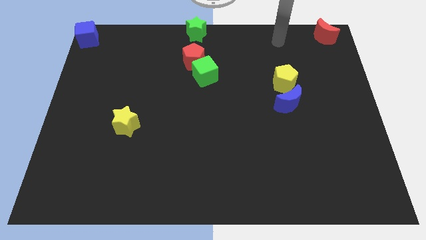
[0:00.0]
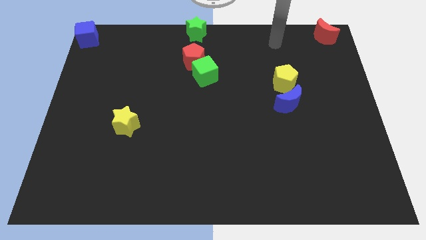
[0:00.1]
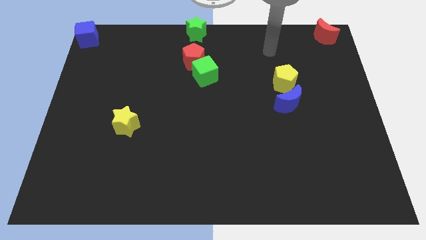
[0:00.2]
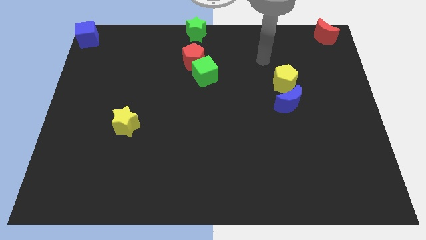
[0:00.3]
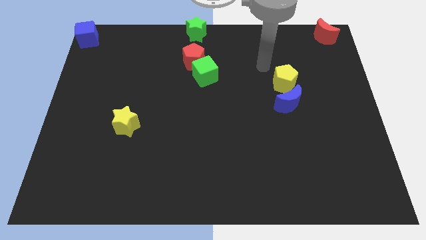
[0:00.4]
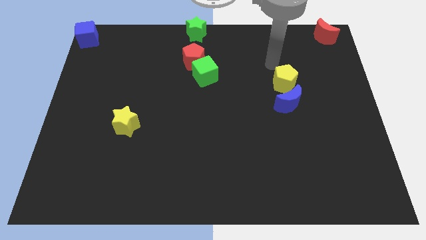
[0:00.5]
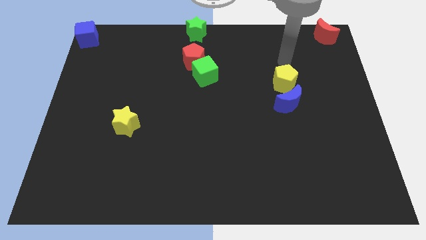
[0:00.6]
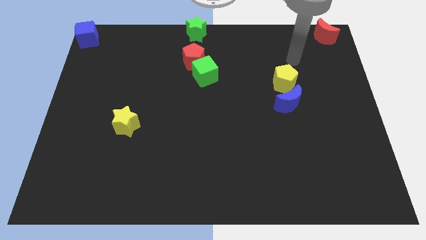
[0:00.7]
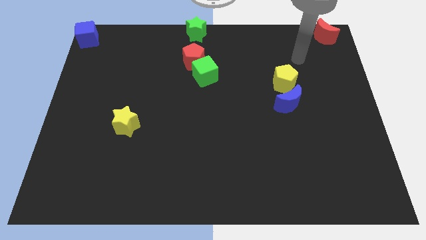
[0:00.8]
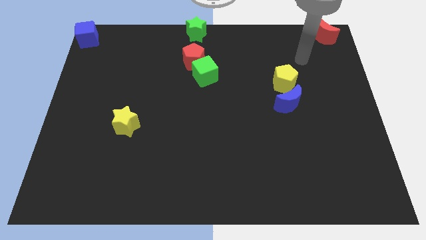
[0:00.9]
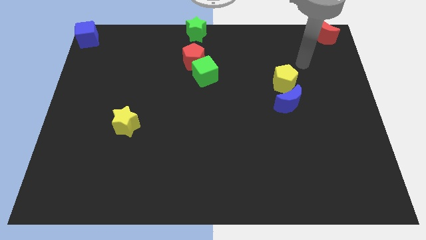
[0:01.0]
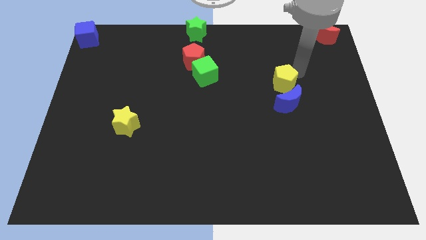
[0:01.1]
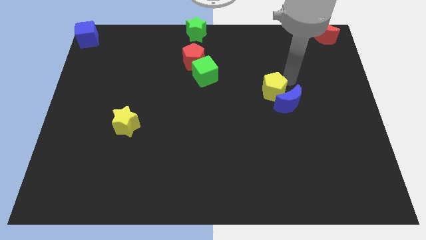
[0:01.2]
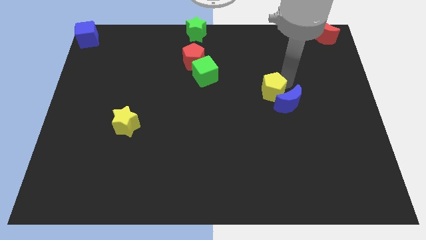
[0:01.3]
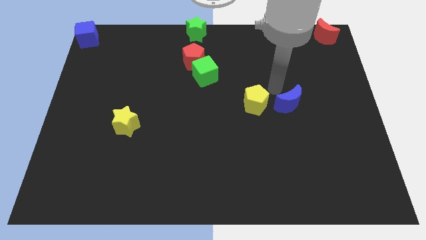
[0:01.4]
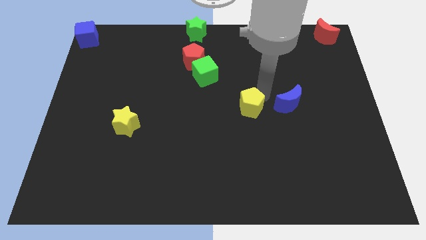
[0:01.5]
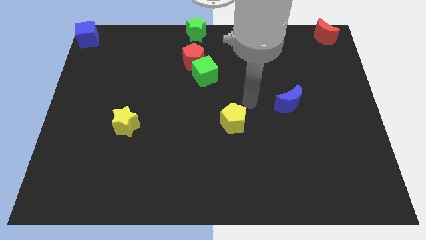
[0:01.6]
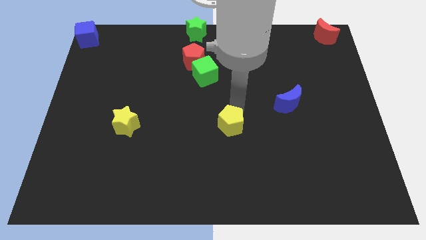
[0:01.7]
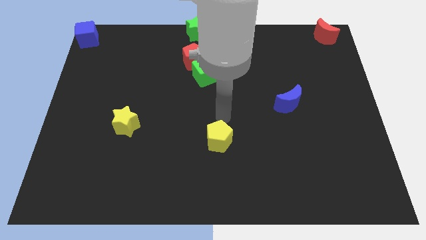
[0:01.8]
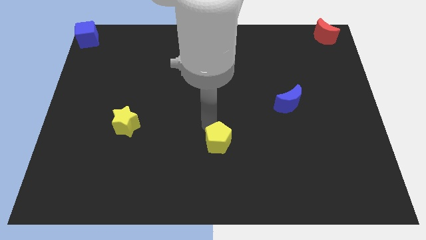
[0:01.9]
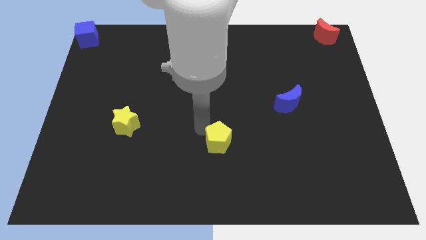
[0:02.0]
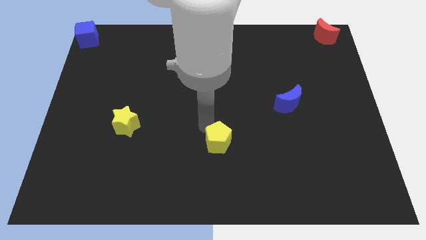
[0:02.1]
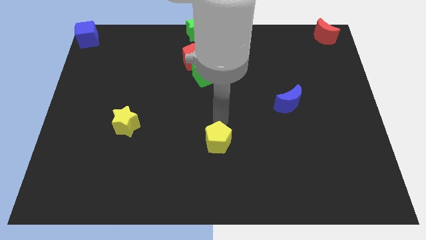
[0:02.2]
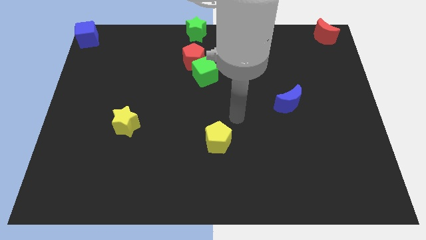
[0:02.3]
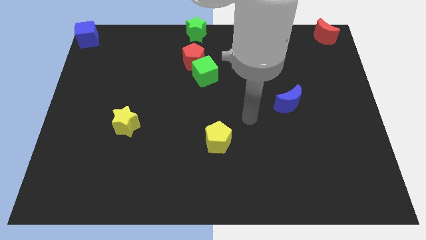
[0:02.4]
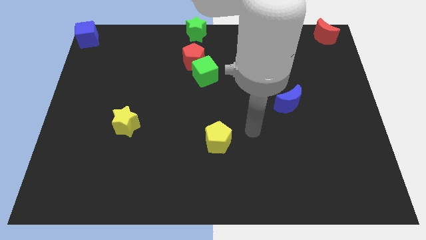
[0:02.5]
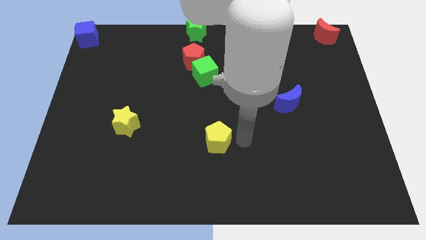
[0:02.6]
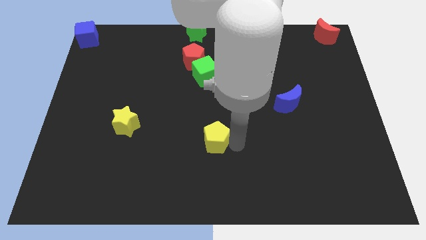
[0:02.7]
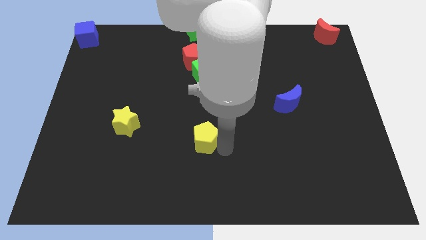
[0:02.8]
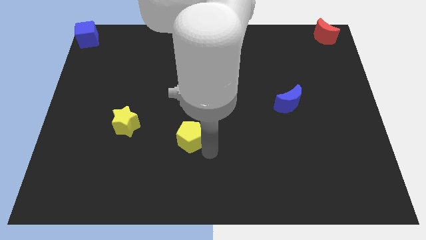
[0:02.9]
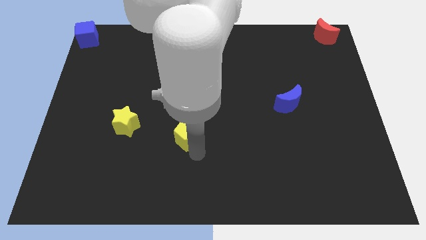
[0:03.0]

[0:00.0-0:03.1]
separate the yellow pentagon and blue moon

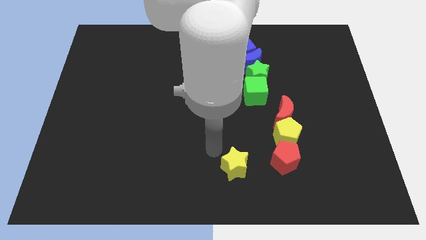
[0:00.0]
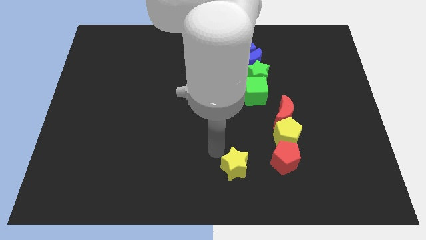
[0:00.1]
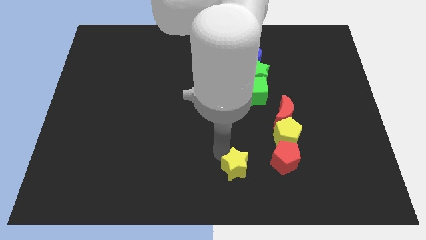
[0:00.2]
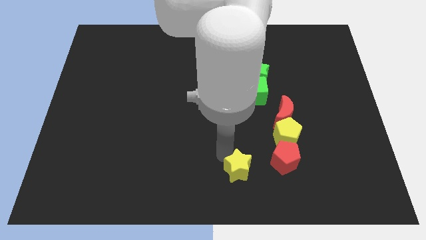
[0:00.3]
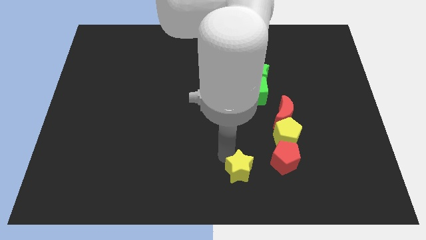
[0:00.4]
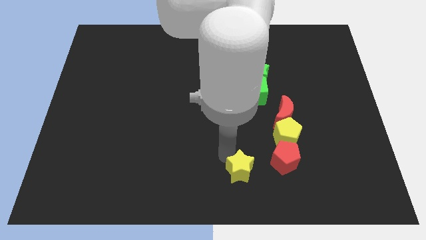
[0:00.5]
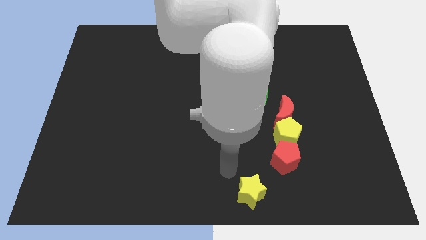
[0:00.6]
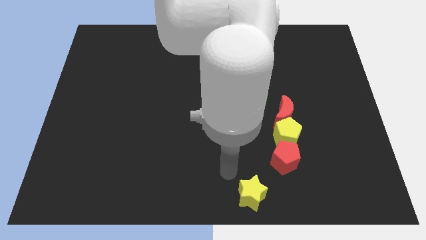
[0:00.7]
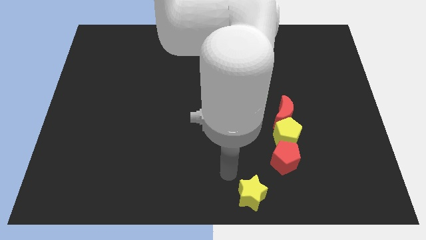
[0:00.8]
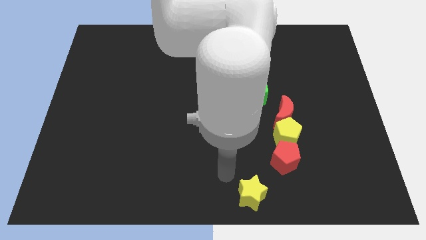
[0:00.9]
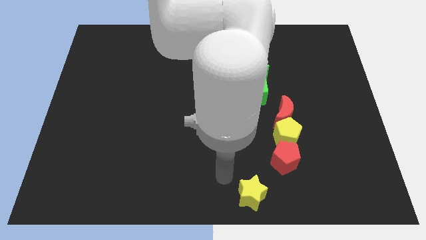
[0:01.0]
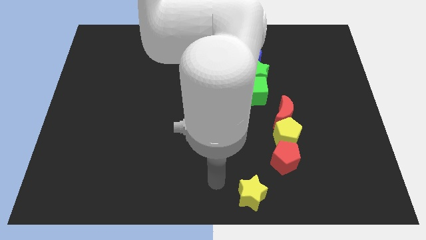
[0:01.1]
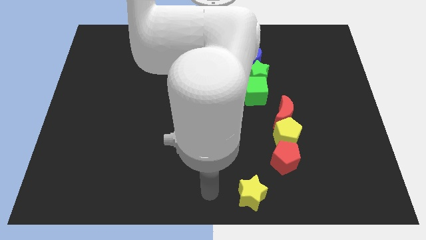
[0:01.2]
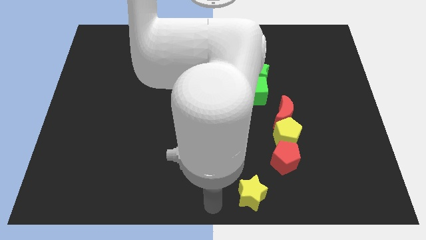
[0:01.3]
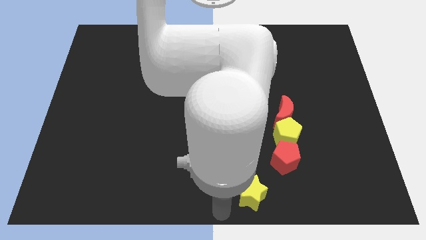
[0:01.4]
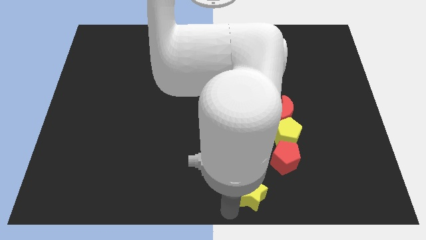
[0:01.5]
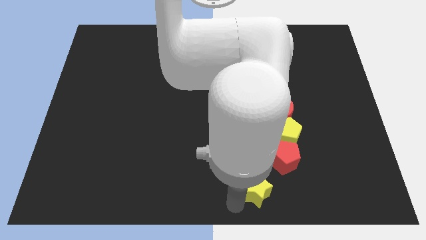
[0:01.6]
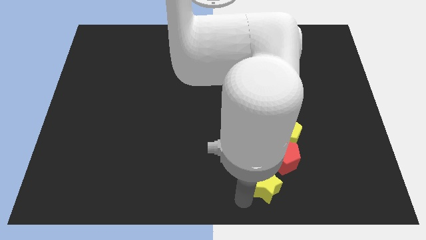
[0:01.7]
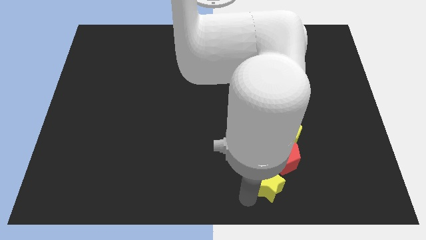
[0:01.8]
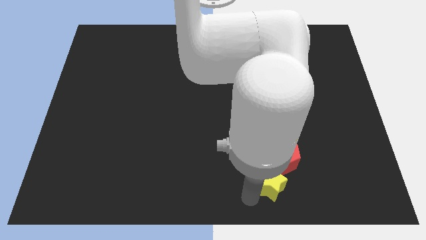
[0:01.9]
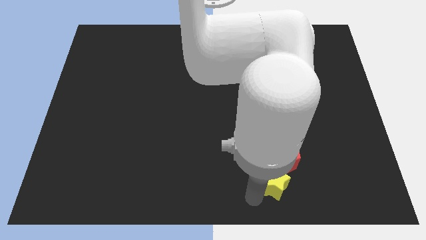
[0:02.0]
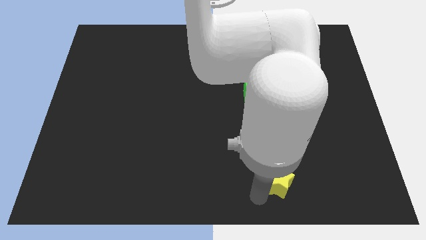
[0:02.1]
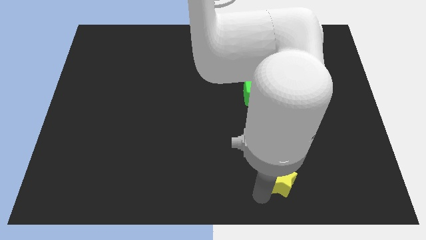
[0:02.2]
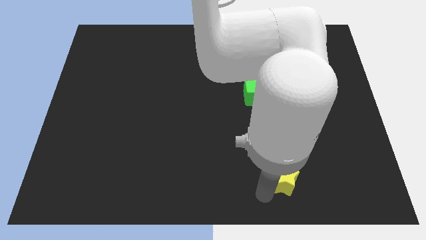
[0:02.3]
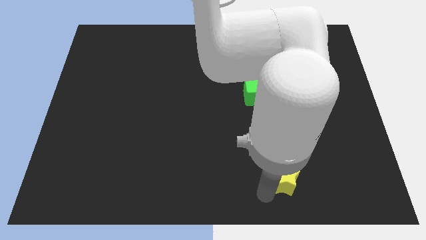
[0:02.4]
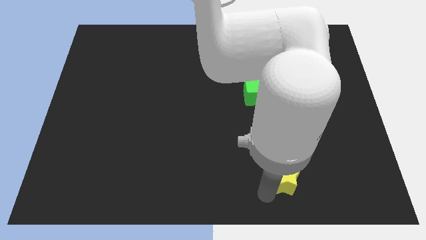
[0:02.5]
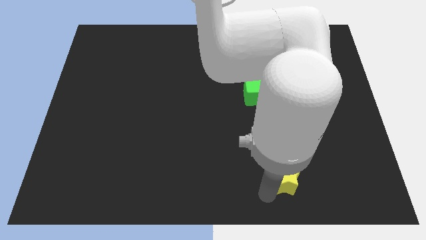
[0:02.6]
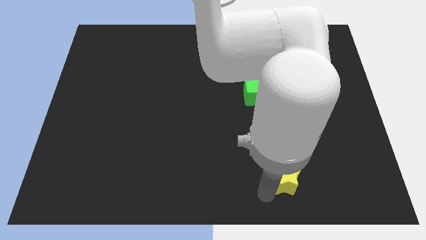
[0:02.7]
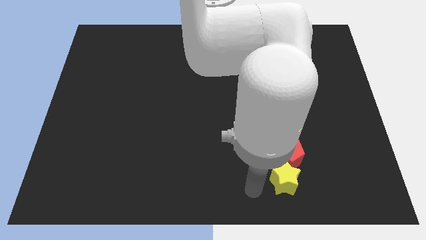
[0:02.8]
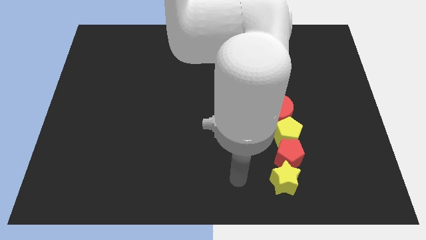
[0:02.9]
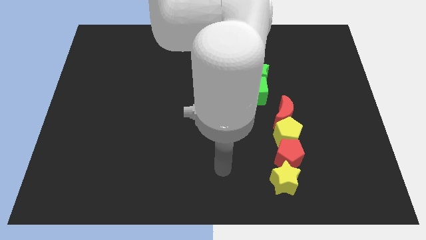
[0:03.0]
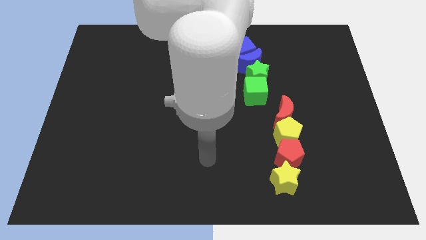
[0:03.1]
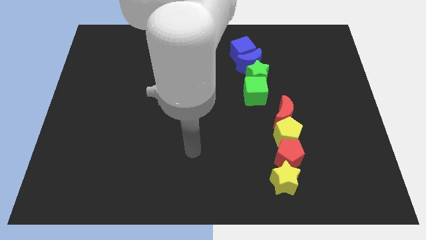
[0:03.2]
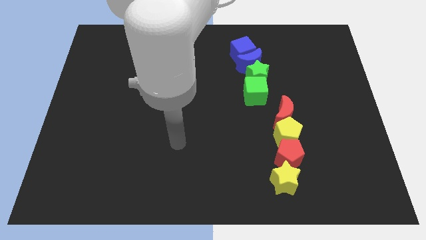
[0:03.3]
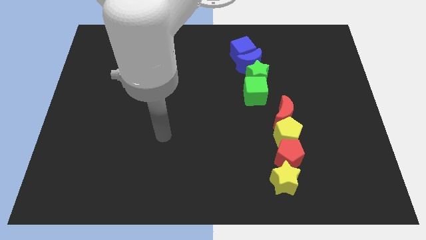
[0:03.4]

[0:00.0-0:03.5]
put the yellow star at the bottom of the red pentagon

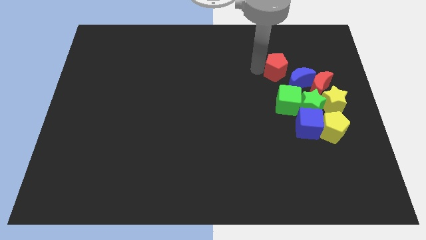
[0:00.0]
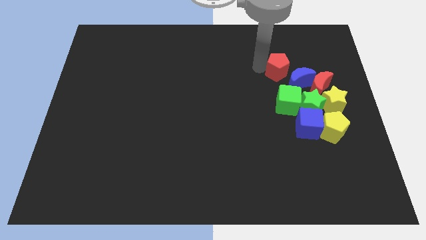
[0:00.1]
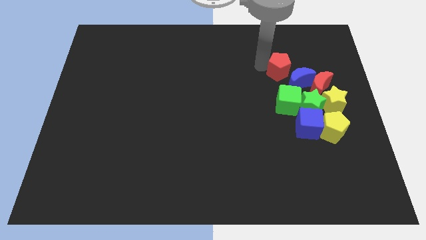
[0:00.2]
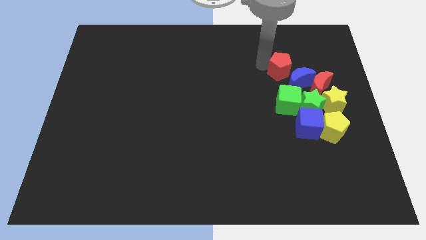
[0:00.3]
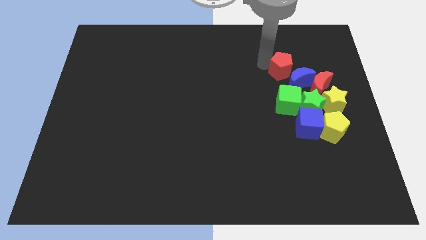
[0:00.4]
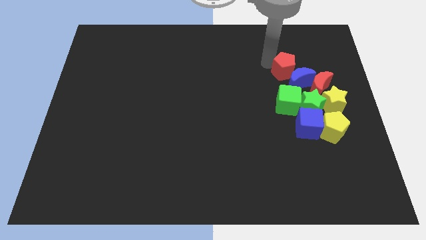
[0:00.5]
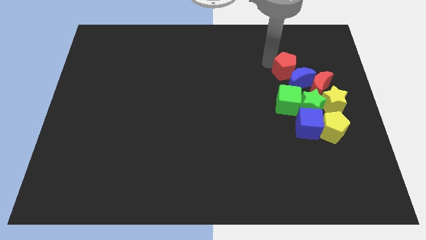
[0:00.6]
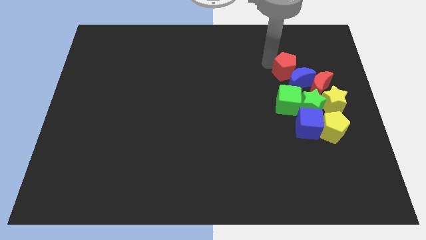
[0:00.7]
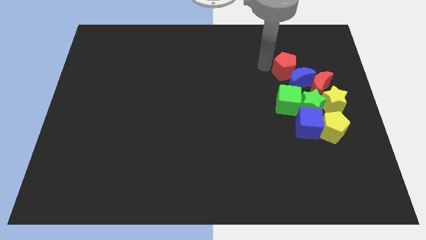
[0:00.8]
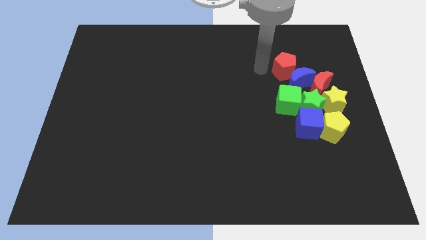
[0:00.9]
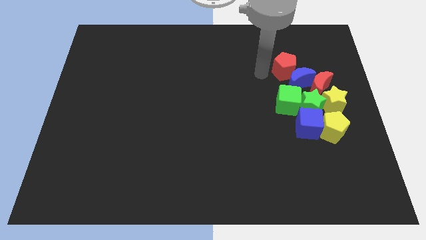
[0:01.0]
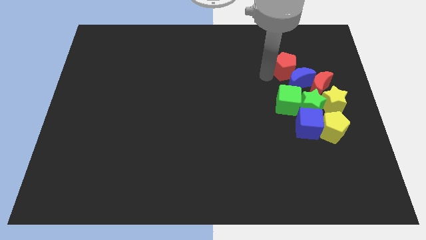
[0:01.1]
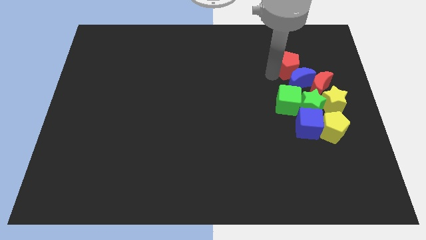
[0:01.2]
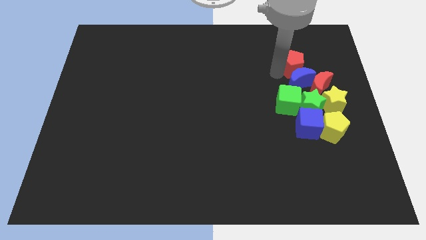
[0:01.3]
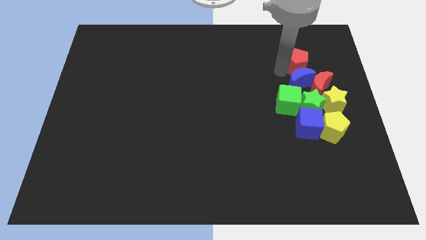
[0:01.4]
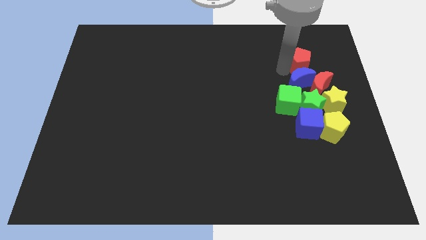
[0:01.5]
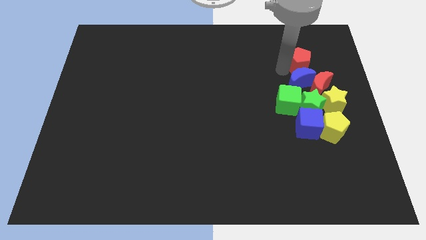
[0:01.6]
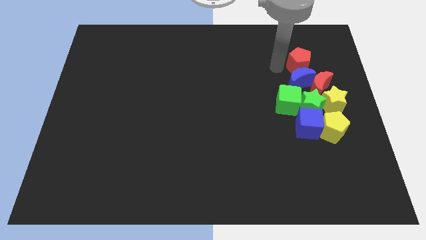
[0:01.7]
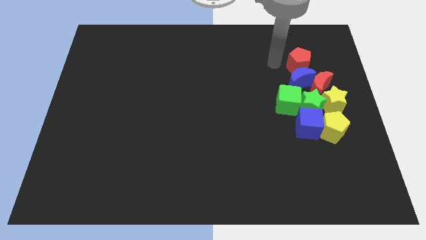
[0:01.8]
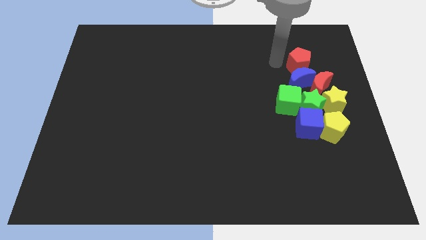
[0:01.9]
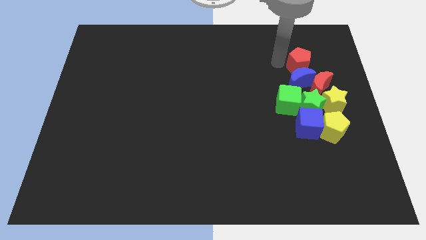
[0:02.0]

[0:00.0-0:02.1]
push red pentagon above the blue moon

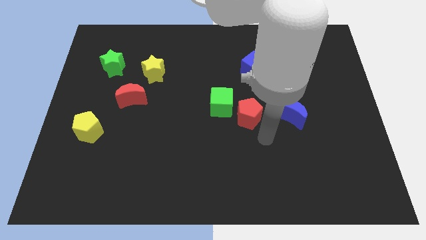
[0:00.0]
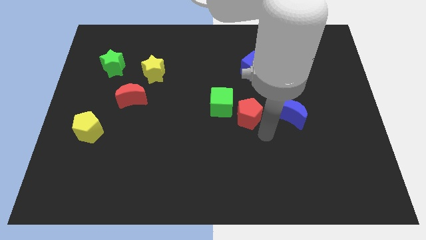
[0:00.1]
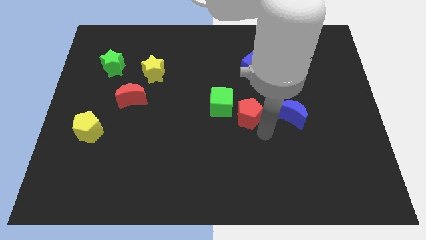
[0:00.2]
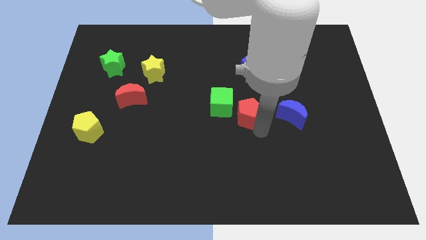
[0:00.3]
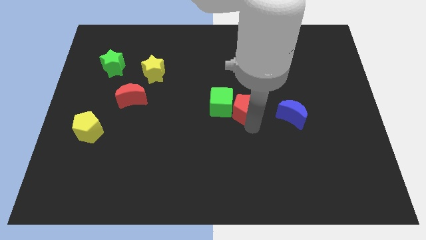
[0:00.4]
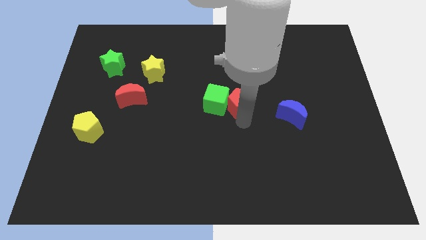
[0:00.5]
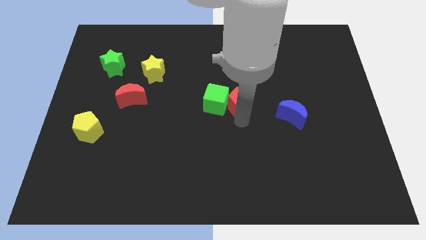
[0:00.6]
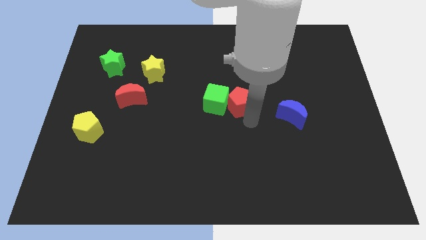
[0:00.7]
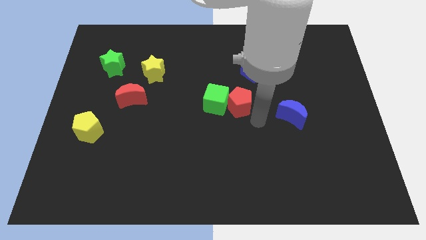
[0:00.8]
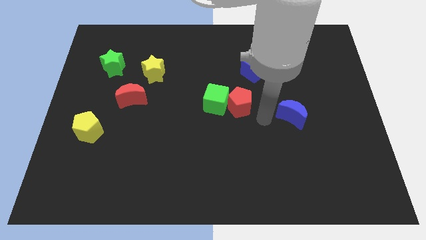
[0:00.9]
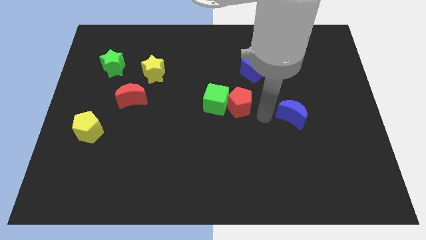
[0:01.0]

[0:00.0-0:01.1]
slide red pentagon into green cube
